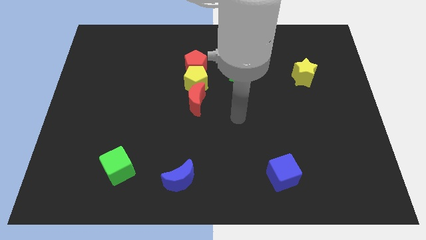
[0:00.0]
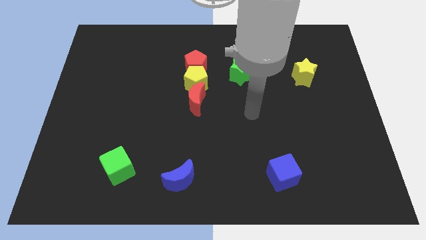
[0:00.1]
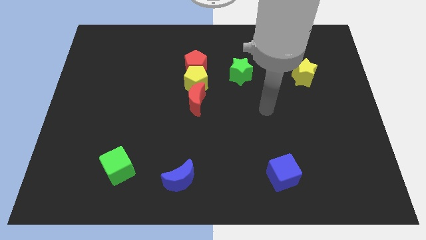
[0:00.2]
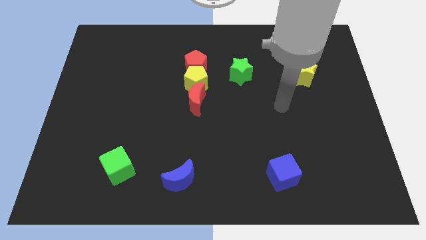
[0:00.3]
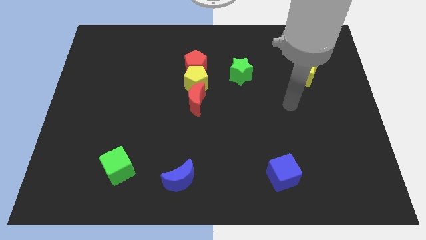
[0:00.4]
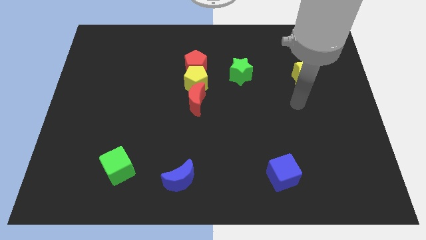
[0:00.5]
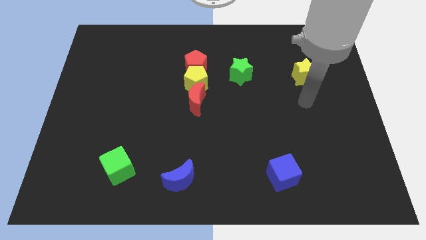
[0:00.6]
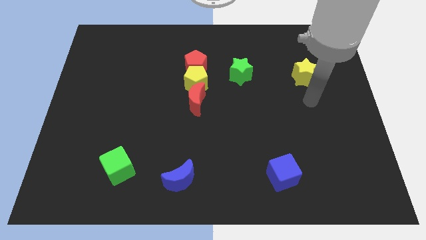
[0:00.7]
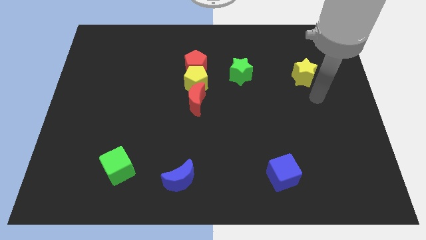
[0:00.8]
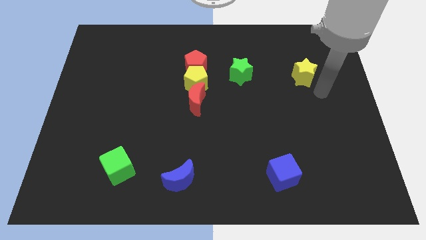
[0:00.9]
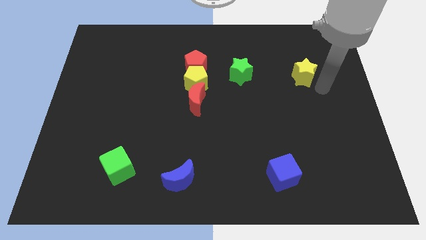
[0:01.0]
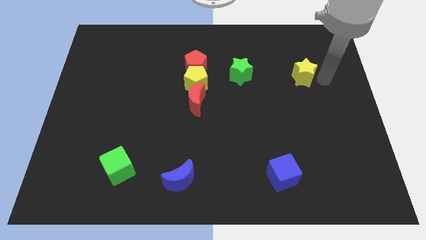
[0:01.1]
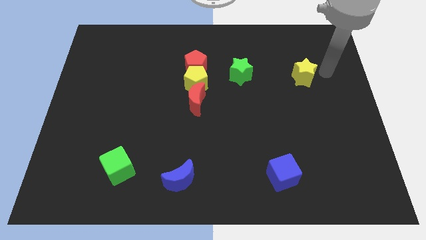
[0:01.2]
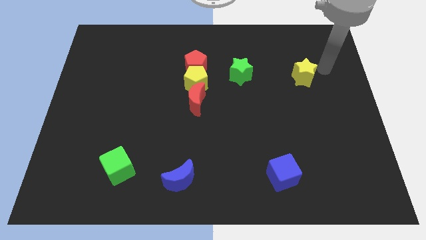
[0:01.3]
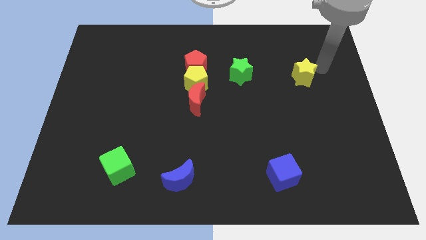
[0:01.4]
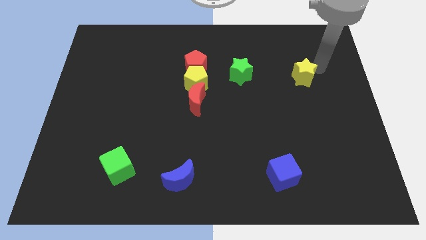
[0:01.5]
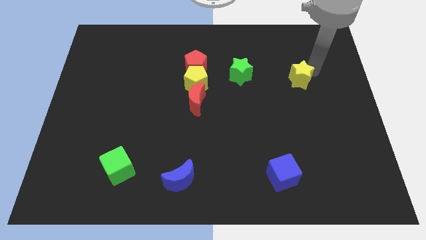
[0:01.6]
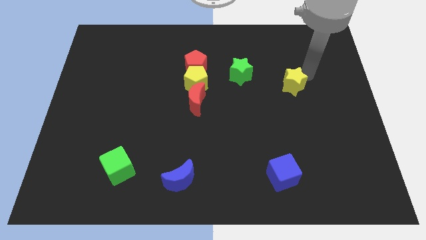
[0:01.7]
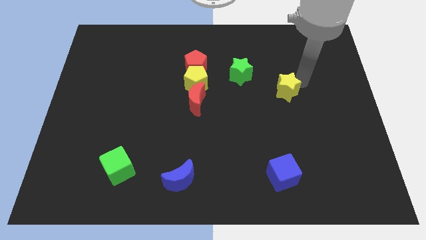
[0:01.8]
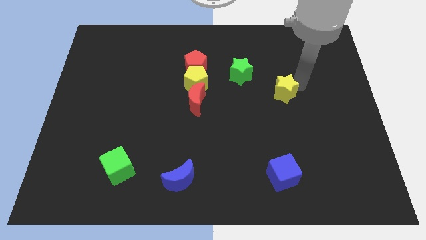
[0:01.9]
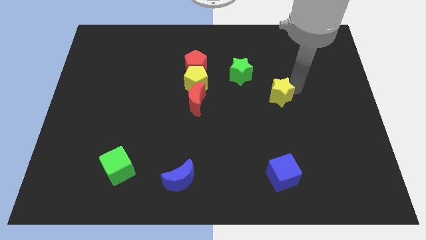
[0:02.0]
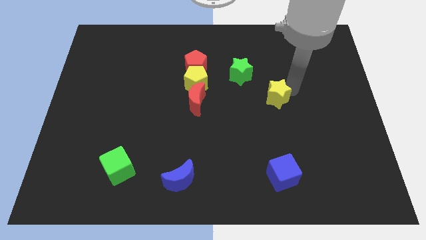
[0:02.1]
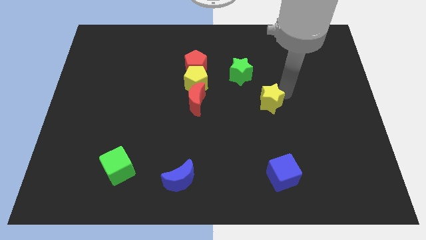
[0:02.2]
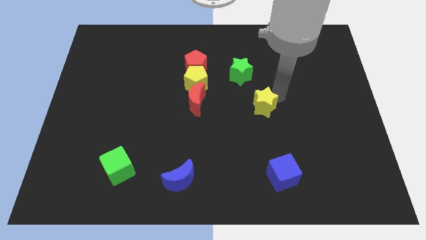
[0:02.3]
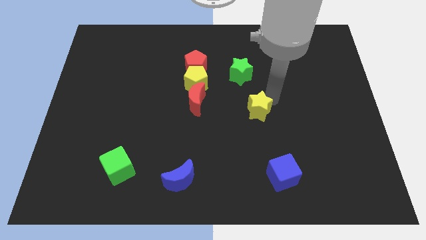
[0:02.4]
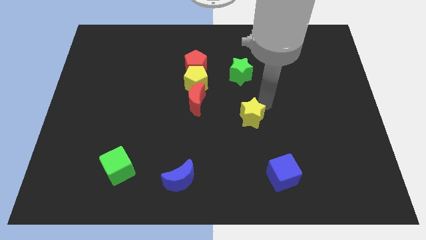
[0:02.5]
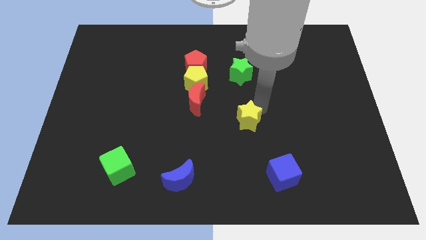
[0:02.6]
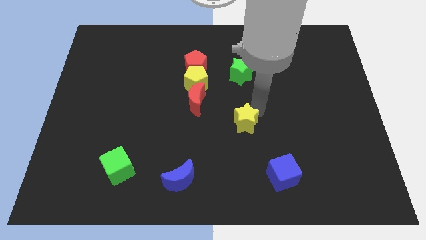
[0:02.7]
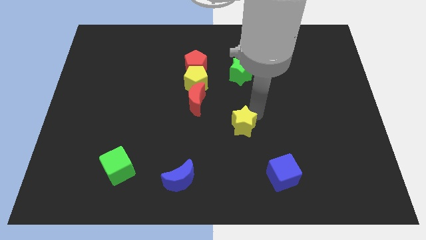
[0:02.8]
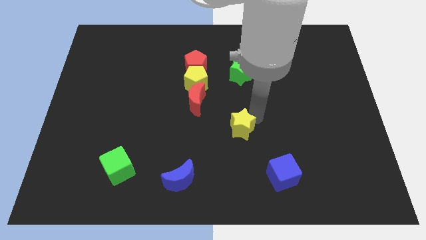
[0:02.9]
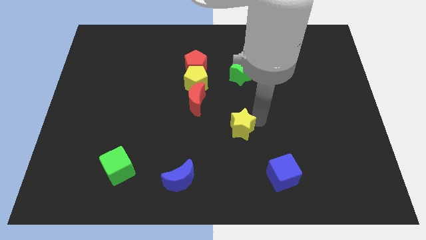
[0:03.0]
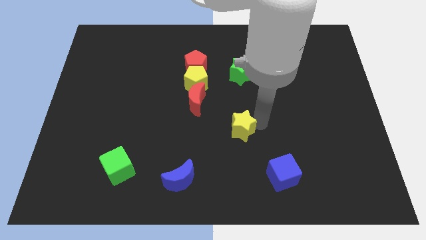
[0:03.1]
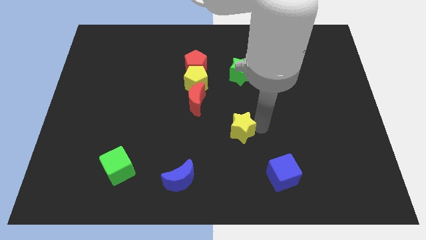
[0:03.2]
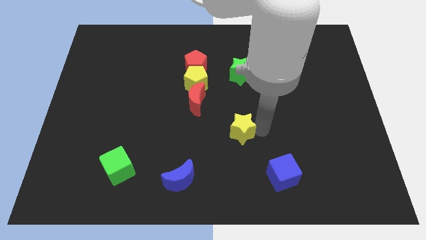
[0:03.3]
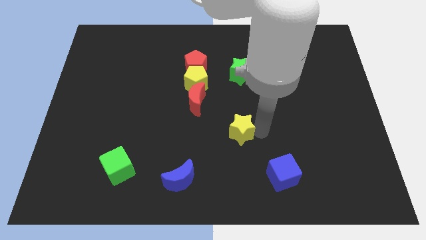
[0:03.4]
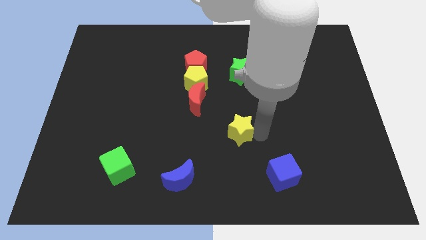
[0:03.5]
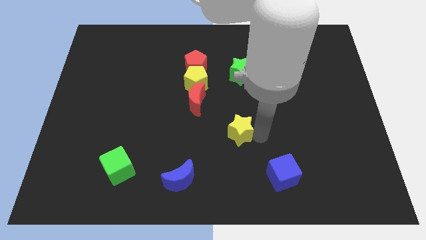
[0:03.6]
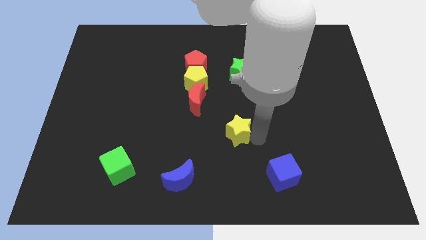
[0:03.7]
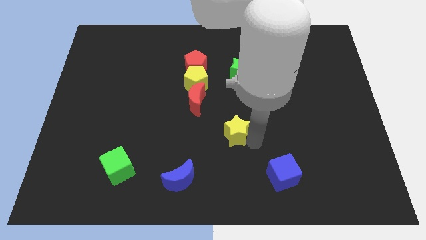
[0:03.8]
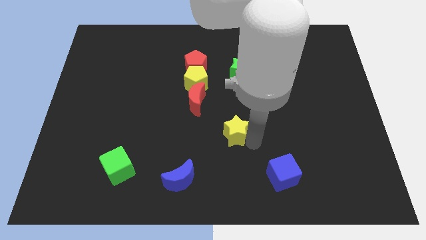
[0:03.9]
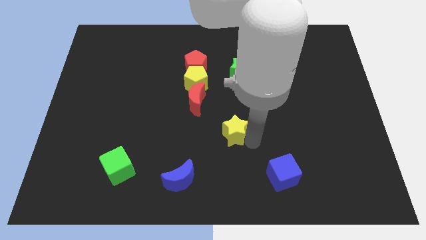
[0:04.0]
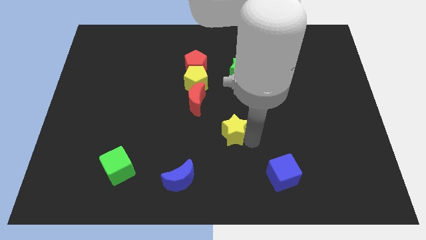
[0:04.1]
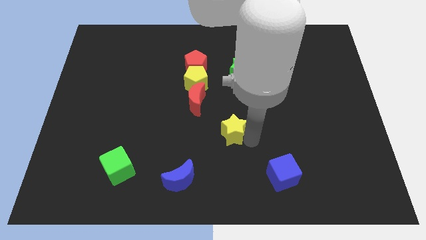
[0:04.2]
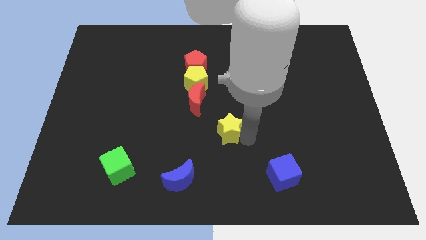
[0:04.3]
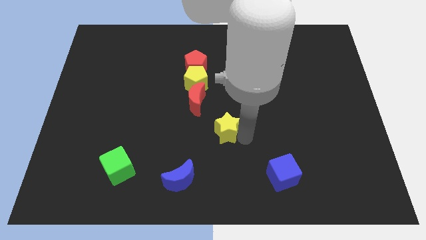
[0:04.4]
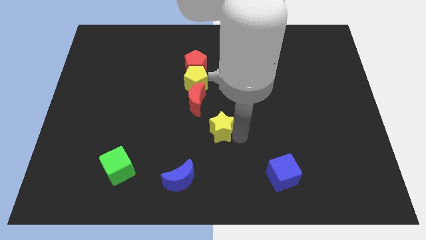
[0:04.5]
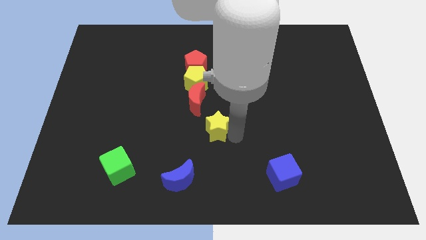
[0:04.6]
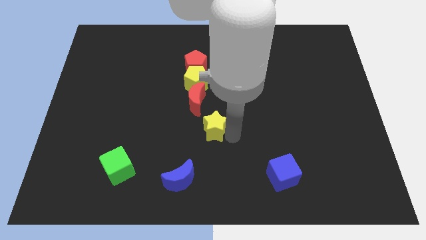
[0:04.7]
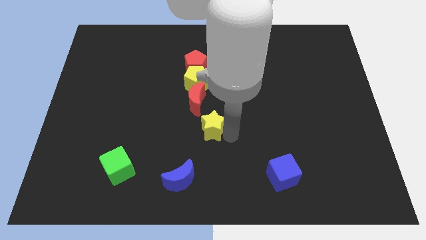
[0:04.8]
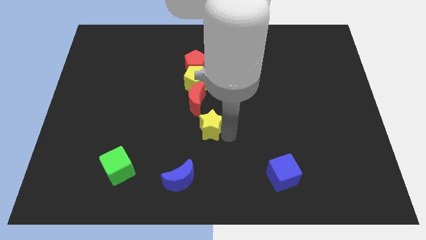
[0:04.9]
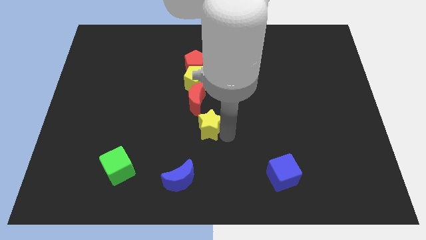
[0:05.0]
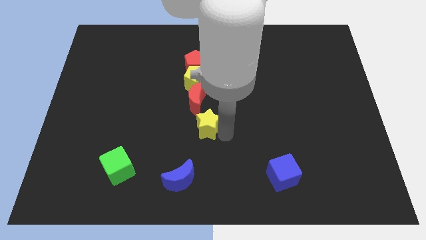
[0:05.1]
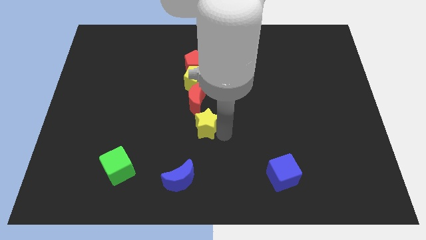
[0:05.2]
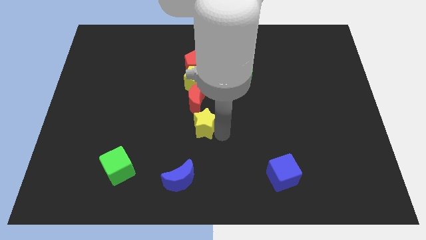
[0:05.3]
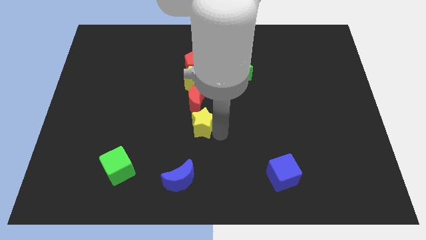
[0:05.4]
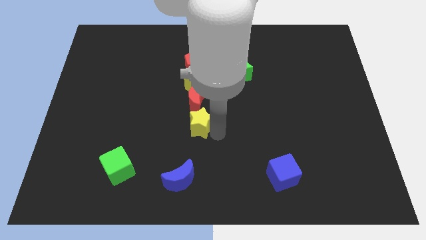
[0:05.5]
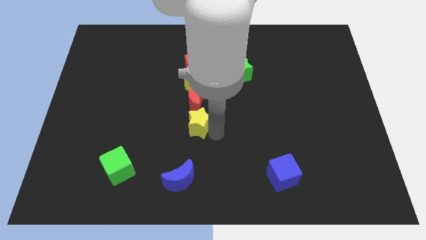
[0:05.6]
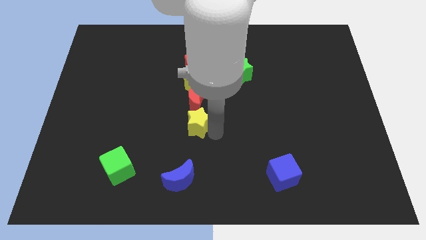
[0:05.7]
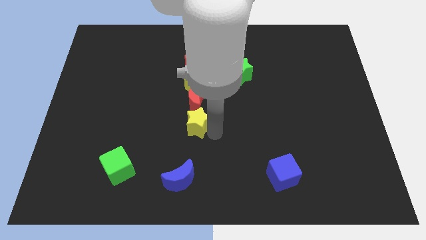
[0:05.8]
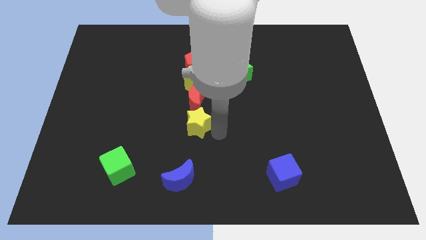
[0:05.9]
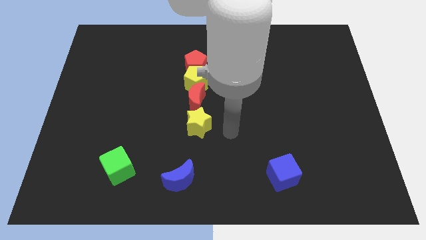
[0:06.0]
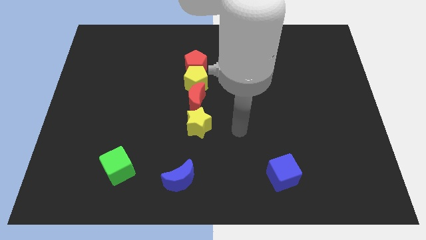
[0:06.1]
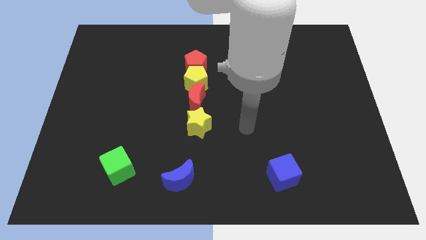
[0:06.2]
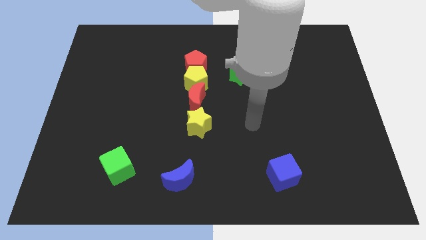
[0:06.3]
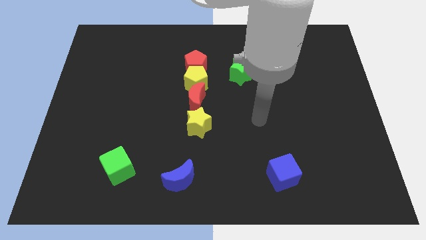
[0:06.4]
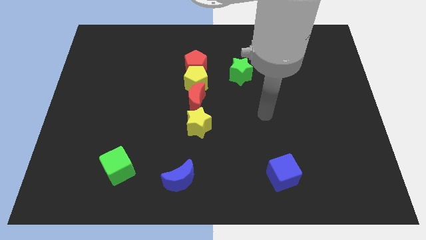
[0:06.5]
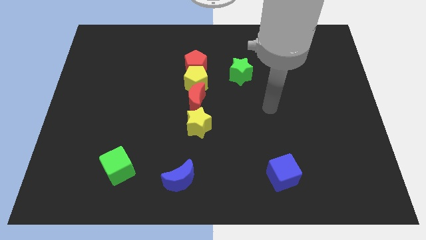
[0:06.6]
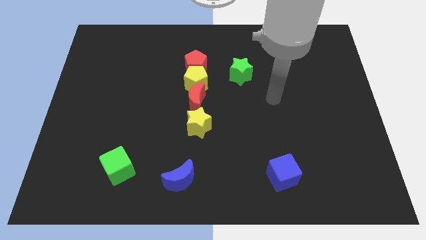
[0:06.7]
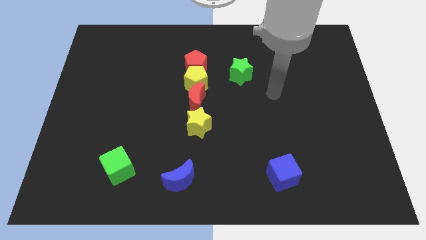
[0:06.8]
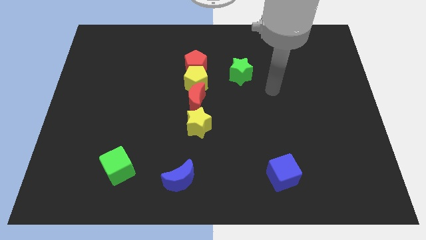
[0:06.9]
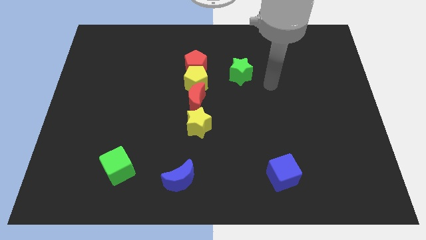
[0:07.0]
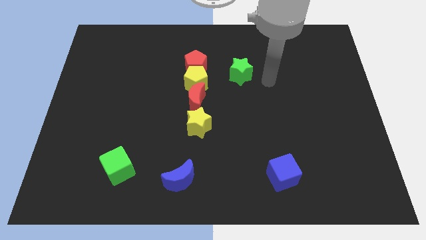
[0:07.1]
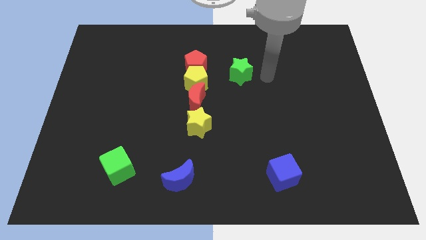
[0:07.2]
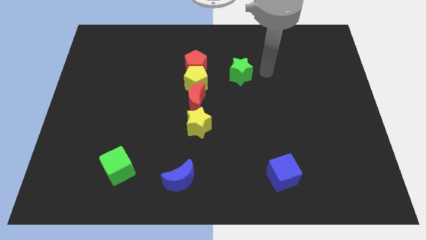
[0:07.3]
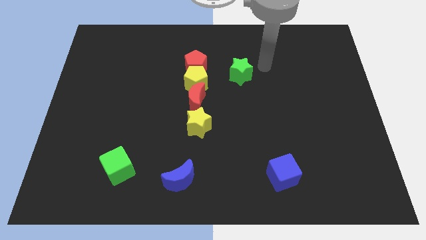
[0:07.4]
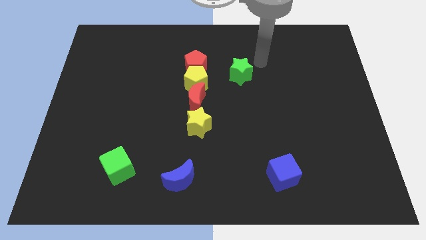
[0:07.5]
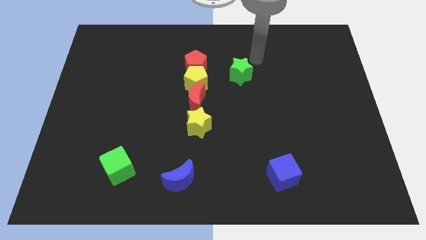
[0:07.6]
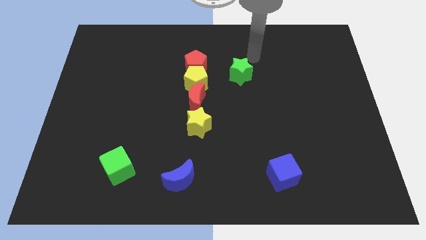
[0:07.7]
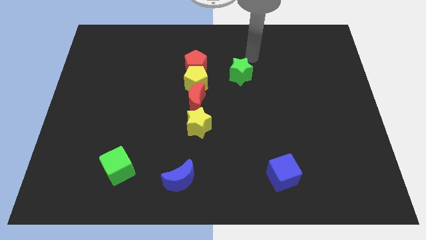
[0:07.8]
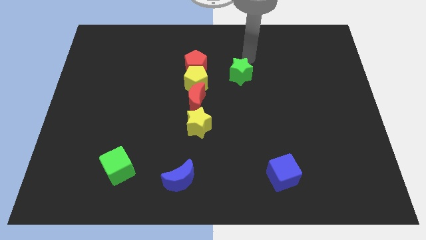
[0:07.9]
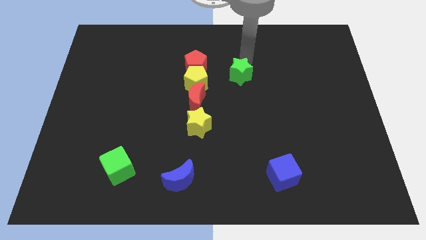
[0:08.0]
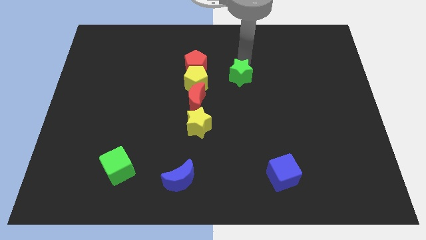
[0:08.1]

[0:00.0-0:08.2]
move the yellow star below the red crescent

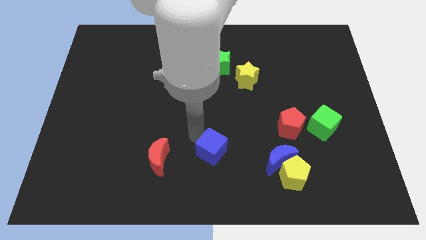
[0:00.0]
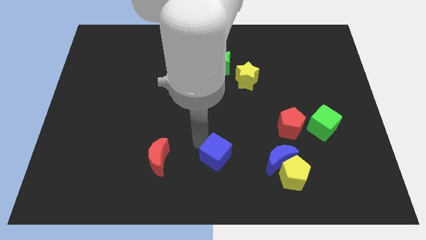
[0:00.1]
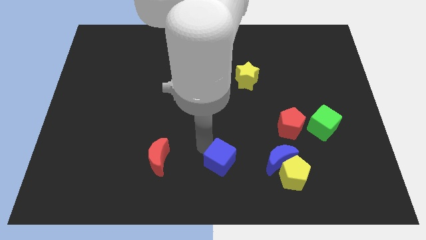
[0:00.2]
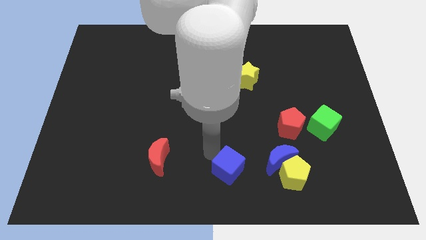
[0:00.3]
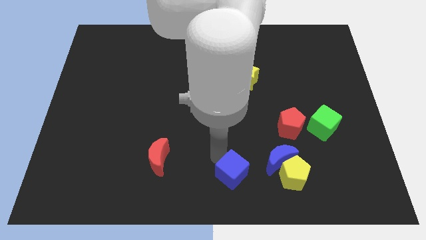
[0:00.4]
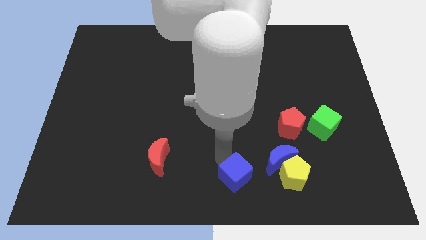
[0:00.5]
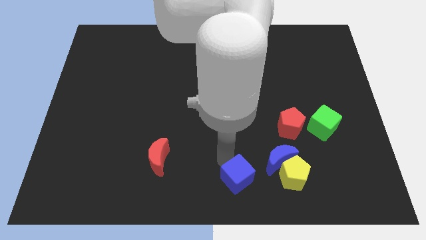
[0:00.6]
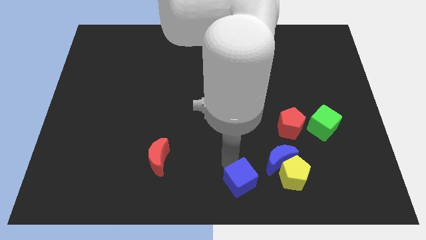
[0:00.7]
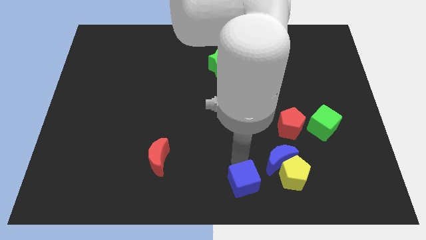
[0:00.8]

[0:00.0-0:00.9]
place the blue cube to the left of the blue moon
